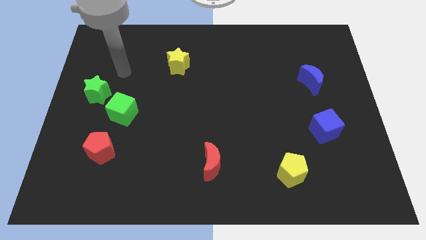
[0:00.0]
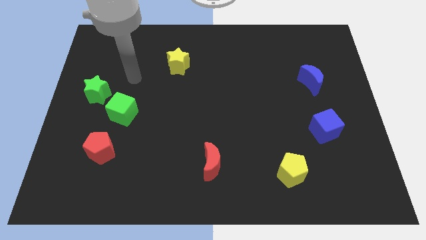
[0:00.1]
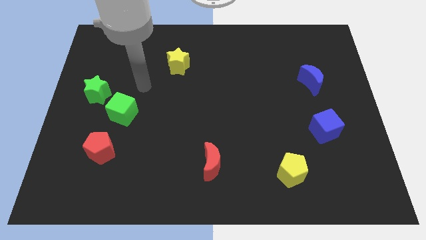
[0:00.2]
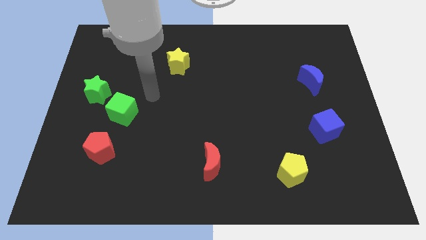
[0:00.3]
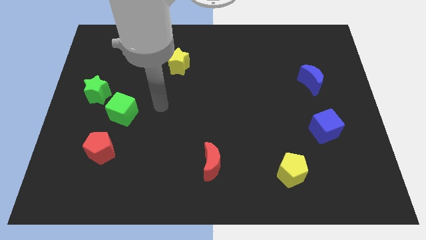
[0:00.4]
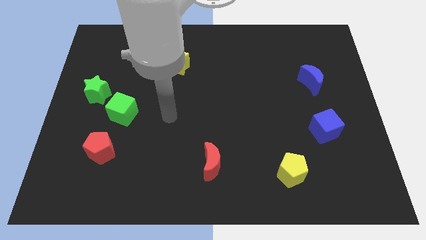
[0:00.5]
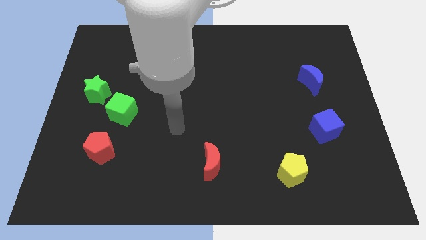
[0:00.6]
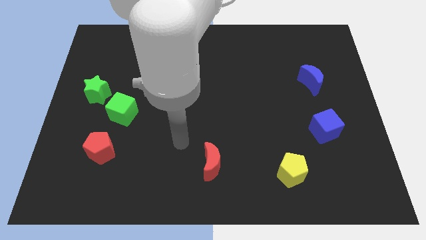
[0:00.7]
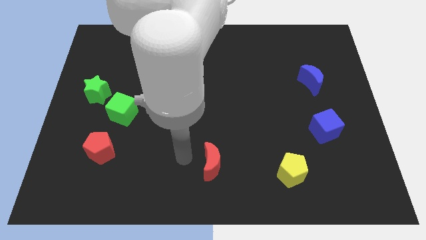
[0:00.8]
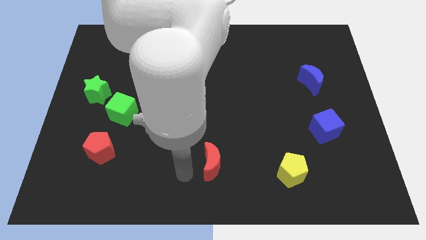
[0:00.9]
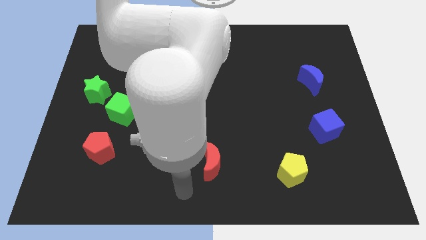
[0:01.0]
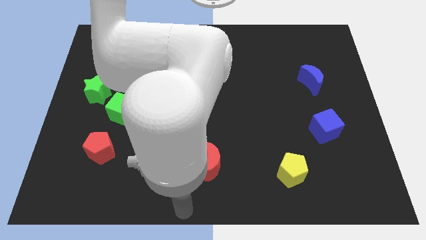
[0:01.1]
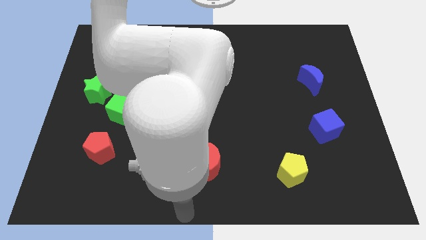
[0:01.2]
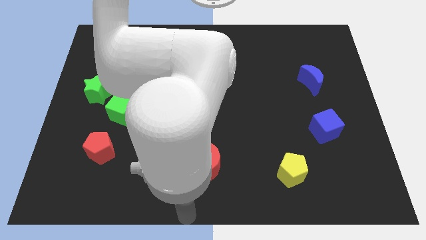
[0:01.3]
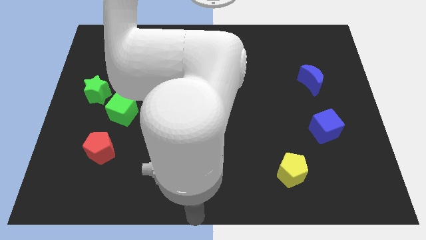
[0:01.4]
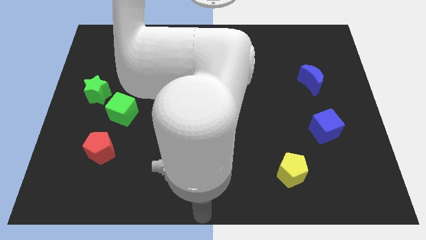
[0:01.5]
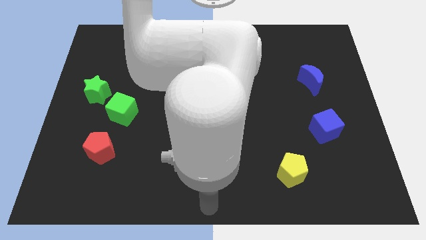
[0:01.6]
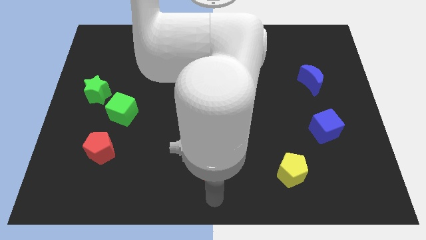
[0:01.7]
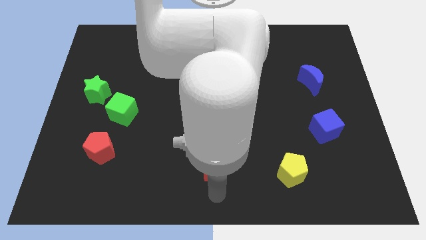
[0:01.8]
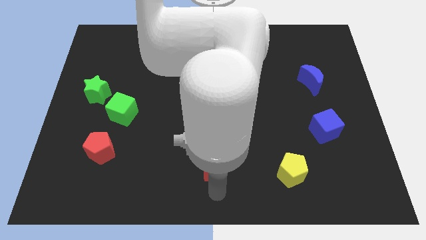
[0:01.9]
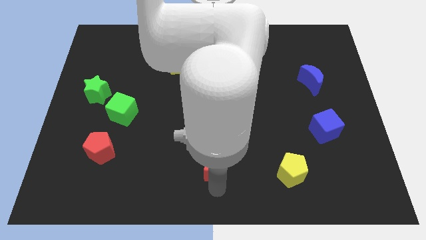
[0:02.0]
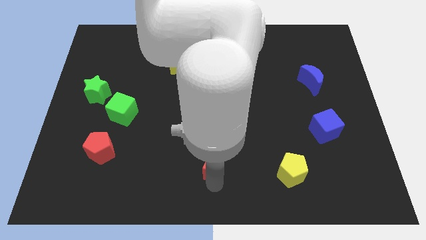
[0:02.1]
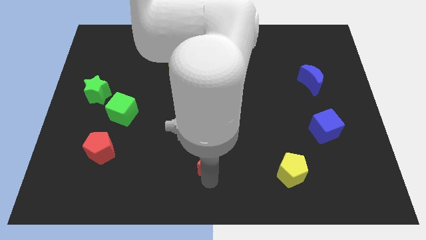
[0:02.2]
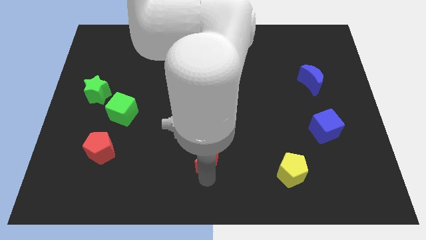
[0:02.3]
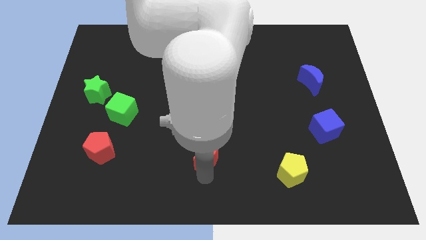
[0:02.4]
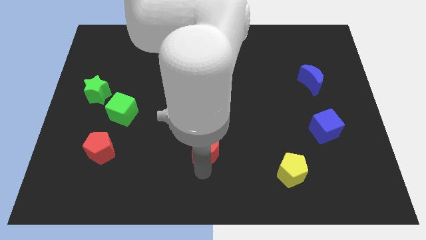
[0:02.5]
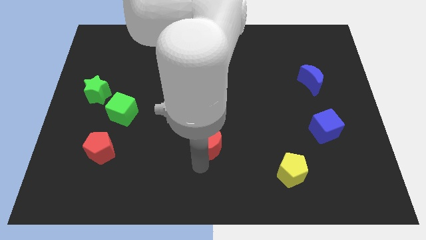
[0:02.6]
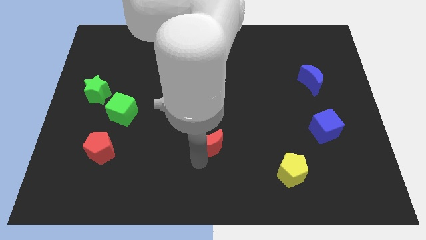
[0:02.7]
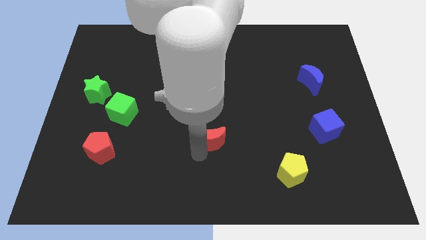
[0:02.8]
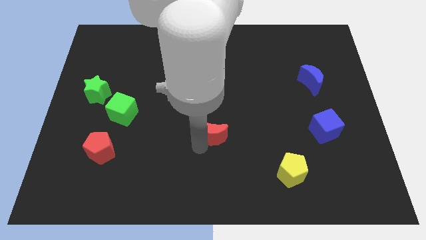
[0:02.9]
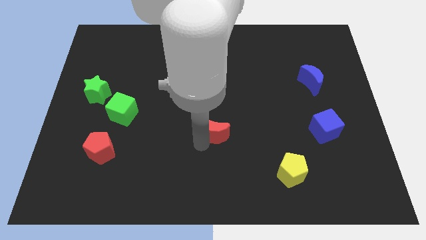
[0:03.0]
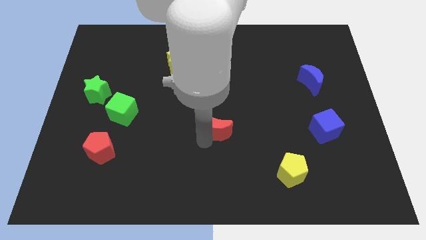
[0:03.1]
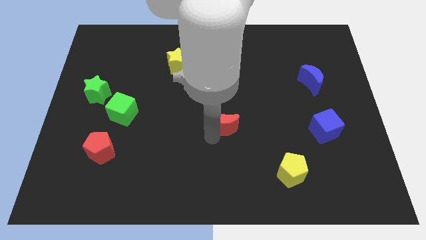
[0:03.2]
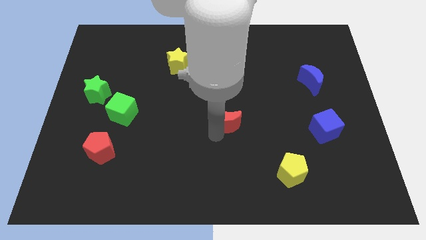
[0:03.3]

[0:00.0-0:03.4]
place the red moon in between the green cube and blue cube

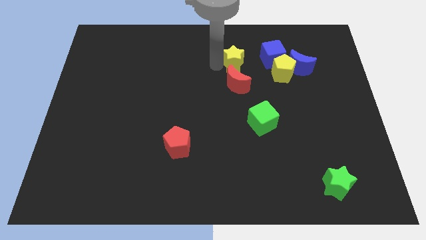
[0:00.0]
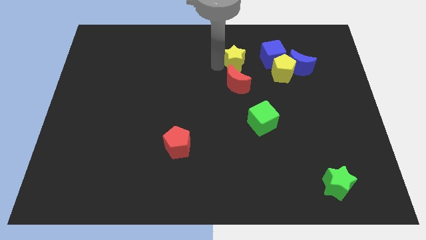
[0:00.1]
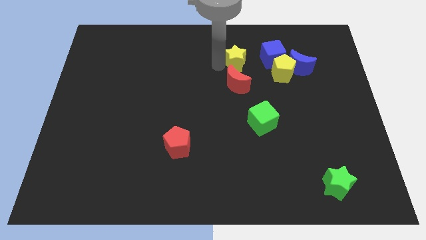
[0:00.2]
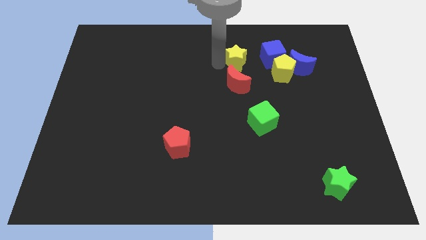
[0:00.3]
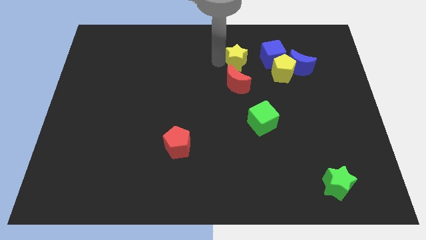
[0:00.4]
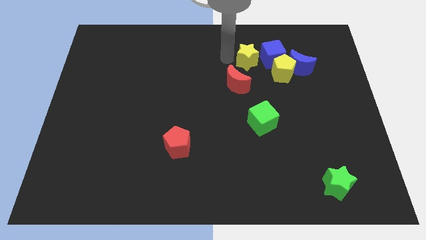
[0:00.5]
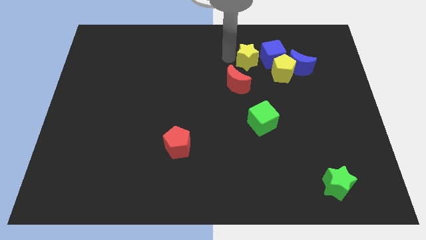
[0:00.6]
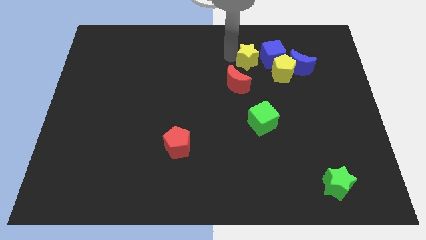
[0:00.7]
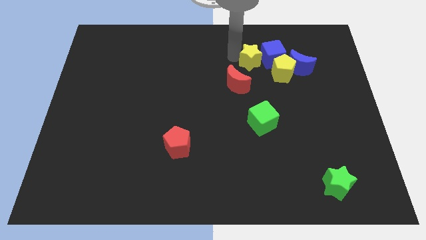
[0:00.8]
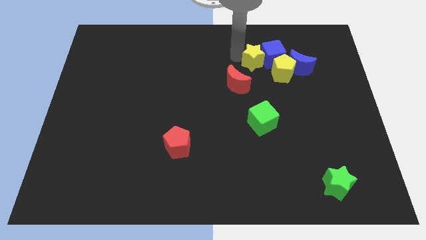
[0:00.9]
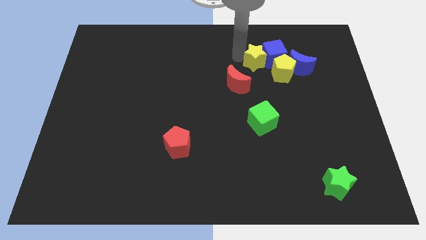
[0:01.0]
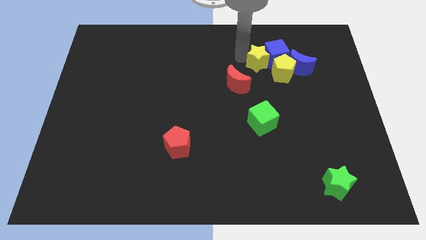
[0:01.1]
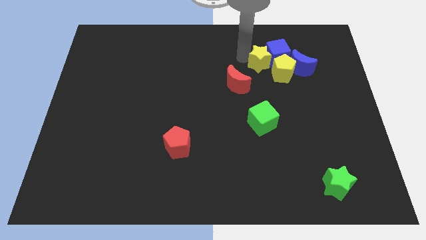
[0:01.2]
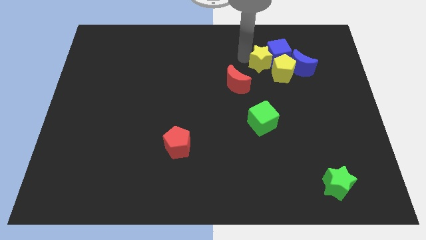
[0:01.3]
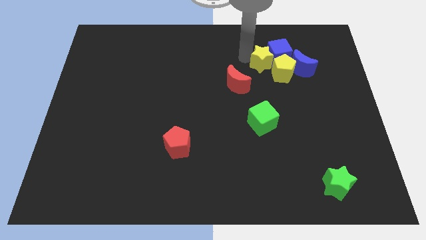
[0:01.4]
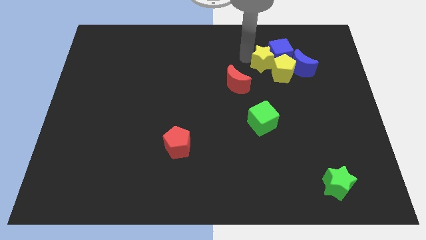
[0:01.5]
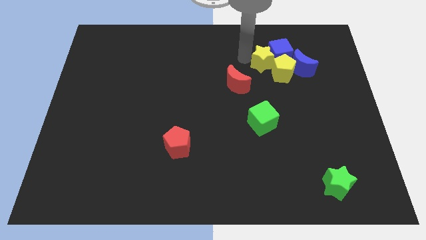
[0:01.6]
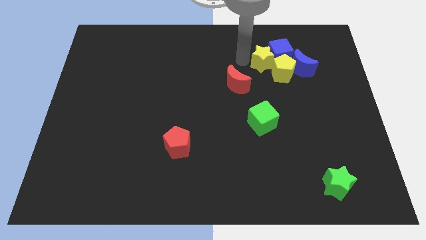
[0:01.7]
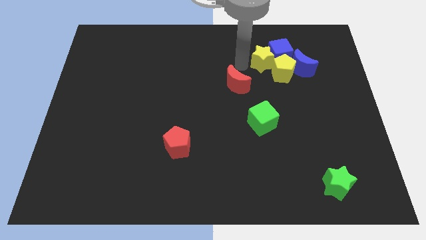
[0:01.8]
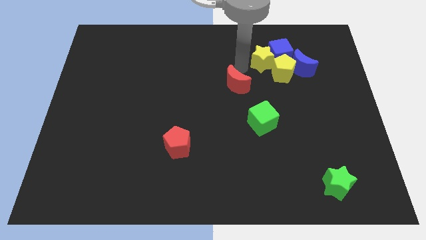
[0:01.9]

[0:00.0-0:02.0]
push the yellow star into the blue cube

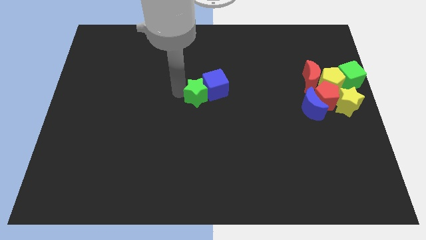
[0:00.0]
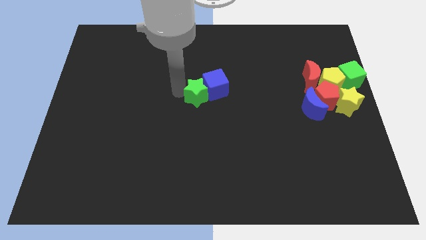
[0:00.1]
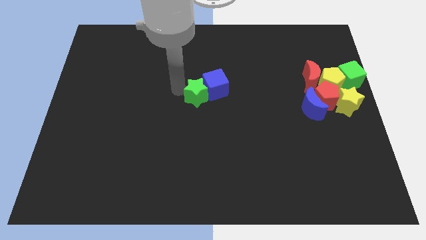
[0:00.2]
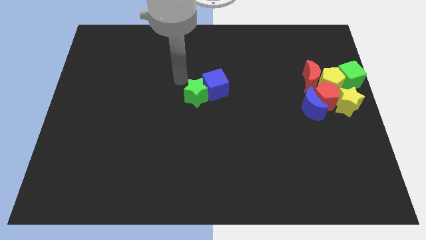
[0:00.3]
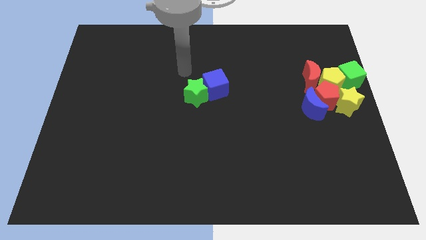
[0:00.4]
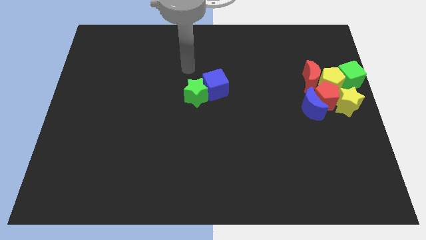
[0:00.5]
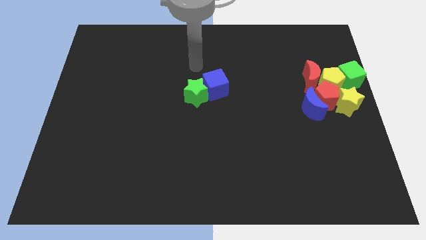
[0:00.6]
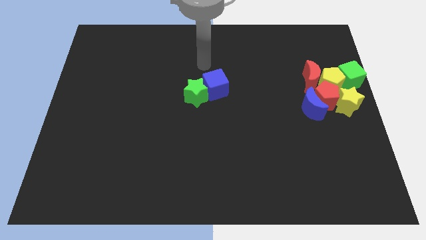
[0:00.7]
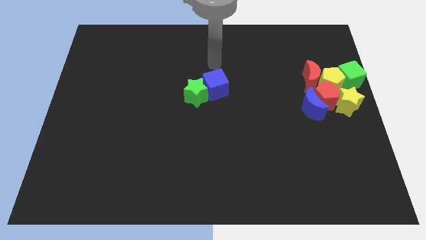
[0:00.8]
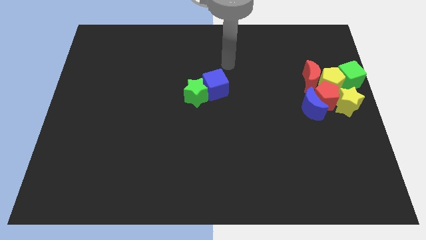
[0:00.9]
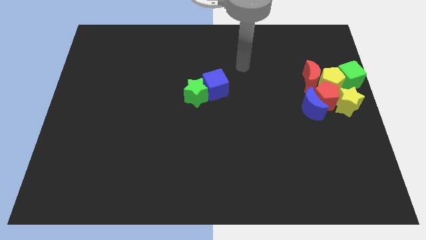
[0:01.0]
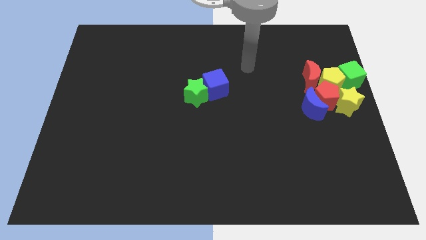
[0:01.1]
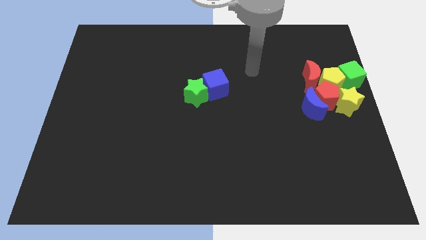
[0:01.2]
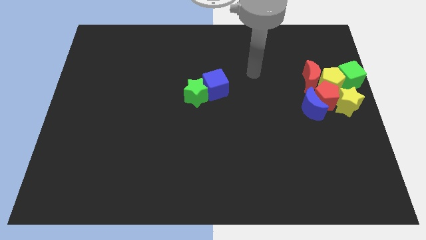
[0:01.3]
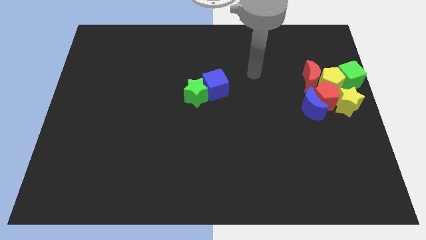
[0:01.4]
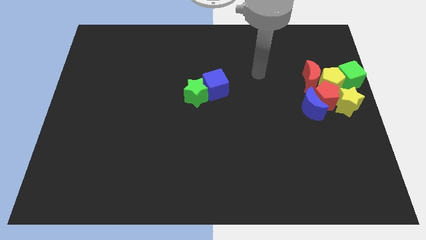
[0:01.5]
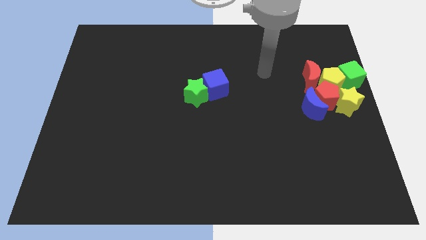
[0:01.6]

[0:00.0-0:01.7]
move arm away from the green star

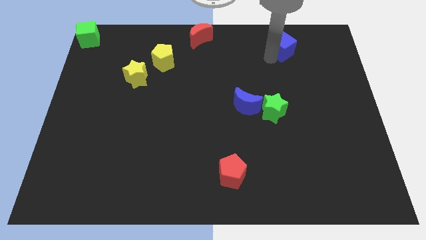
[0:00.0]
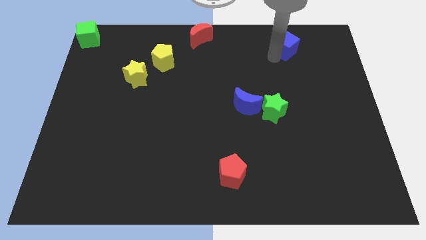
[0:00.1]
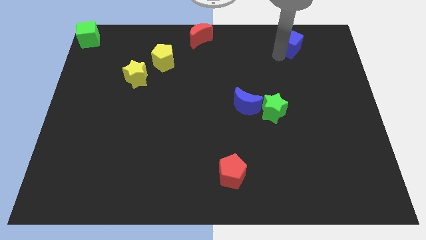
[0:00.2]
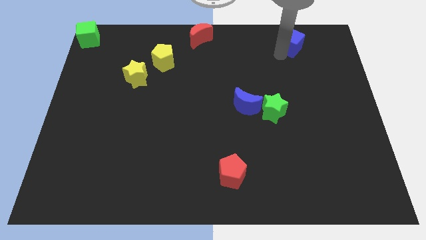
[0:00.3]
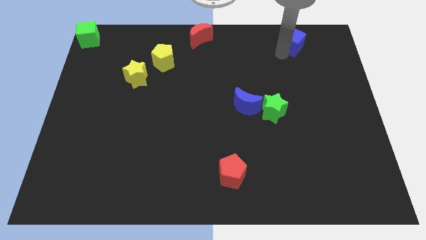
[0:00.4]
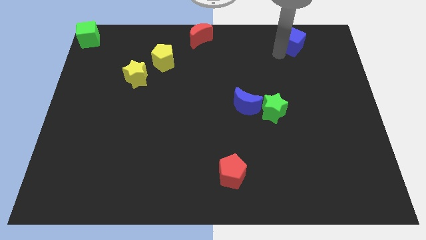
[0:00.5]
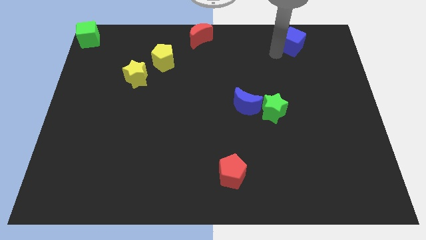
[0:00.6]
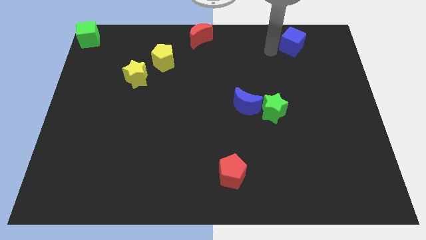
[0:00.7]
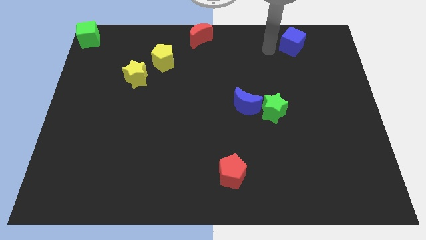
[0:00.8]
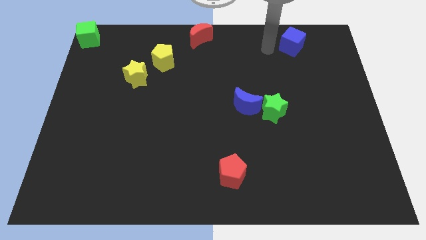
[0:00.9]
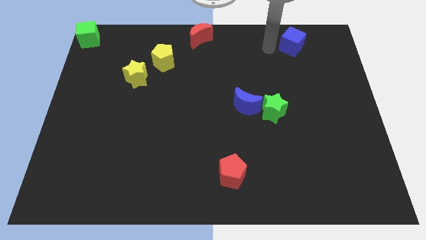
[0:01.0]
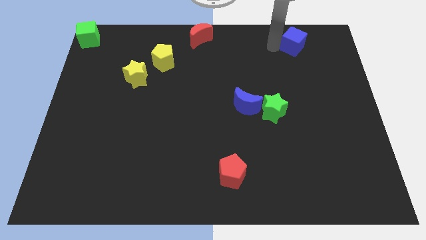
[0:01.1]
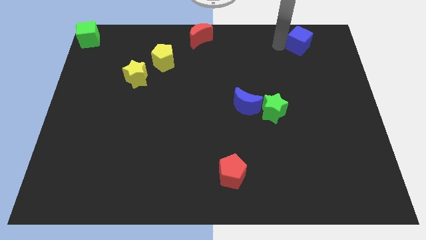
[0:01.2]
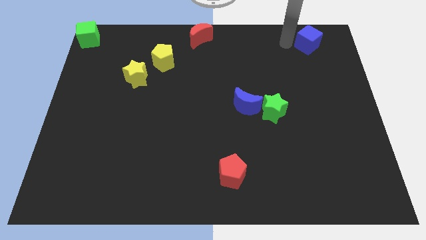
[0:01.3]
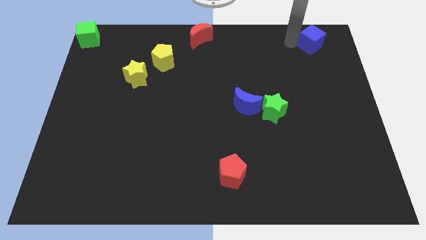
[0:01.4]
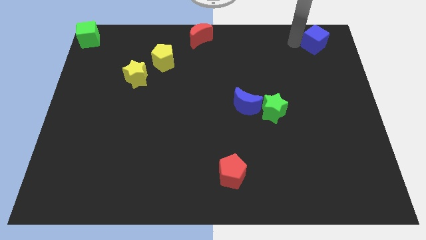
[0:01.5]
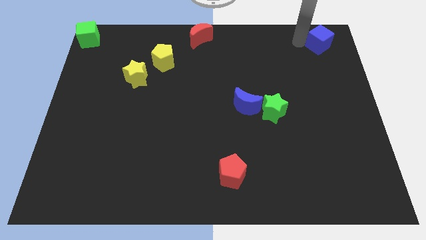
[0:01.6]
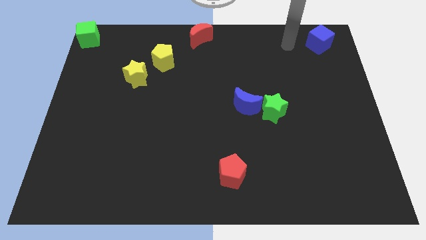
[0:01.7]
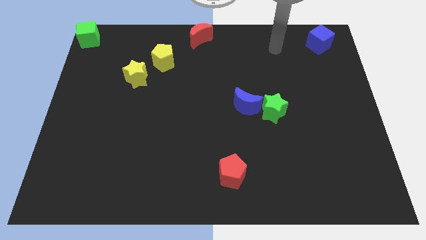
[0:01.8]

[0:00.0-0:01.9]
push the blue cube towards the top right
